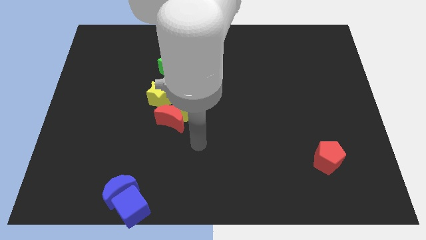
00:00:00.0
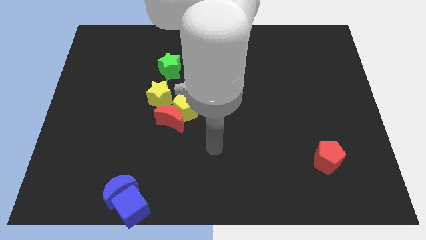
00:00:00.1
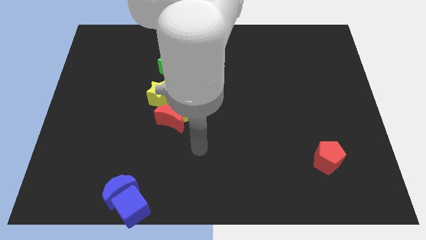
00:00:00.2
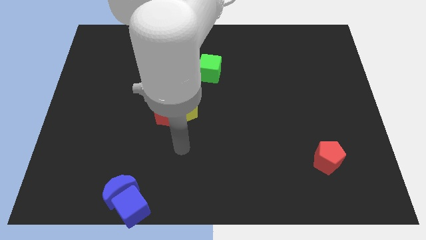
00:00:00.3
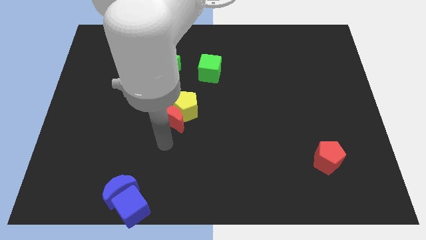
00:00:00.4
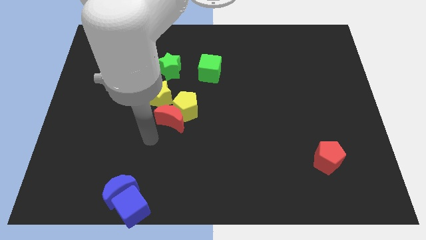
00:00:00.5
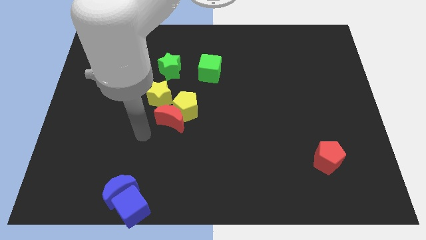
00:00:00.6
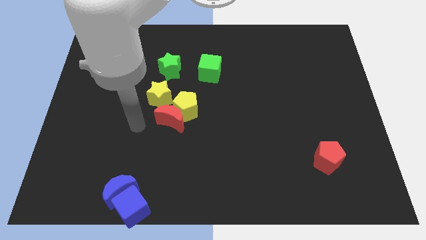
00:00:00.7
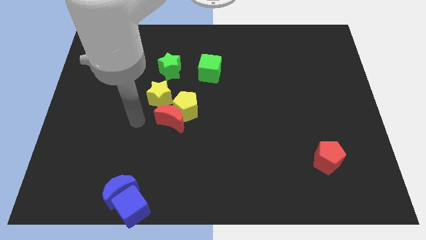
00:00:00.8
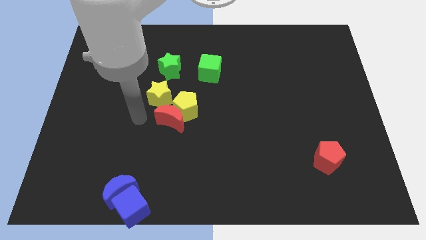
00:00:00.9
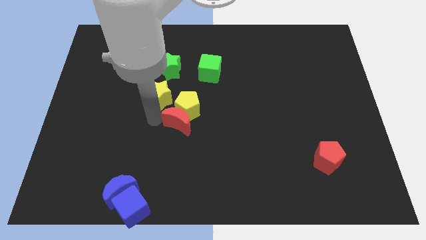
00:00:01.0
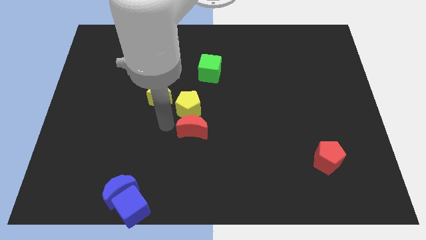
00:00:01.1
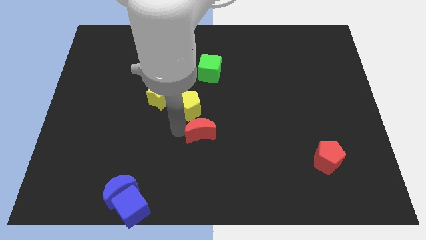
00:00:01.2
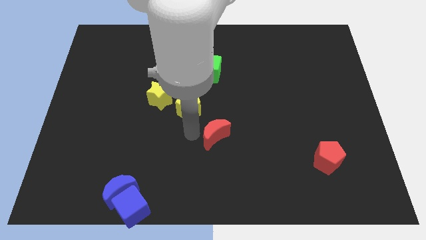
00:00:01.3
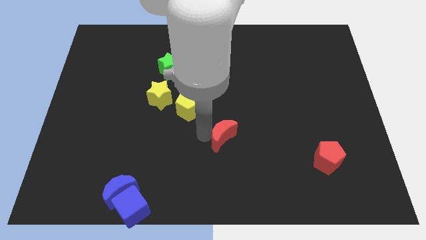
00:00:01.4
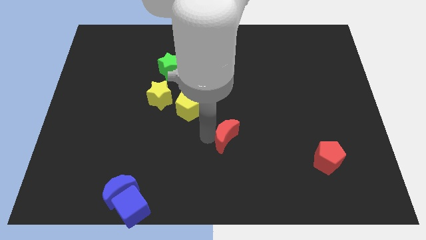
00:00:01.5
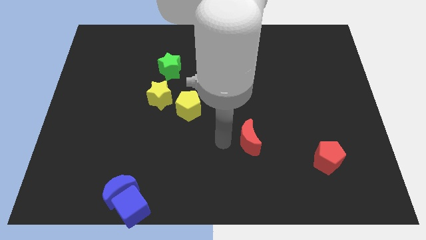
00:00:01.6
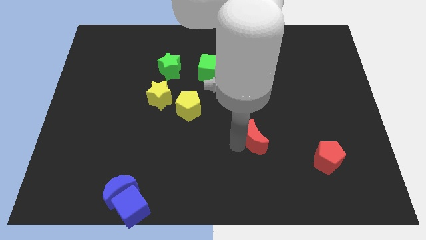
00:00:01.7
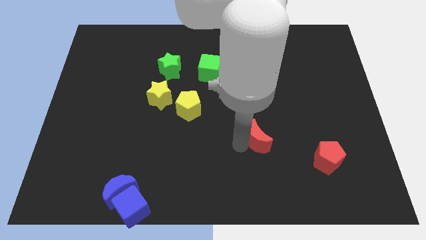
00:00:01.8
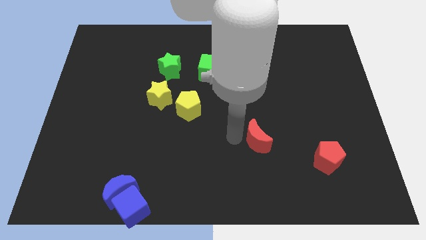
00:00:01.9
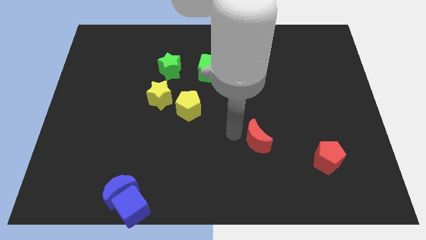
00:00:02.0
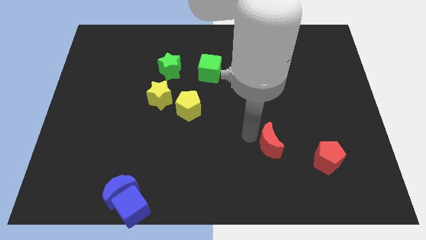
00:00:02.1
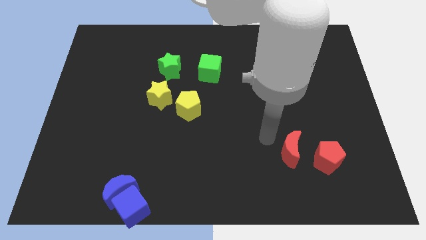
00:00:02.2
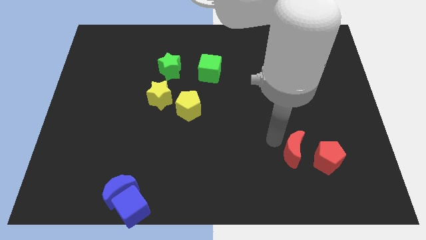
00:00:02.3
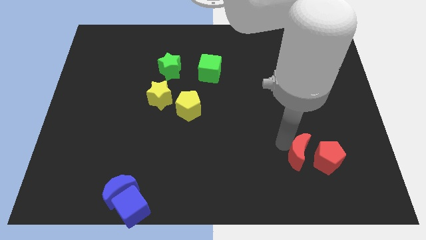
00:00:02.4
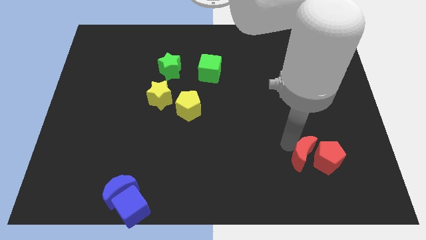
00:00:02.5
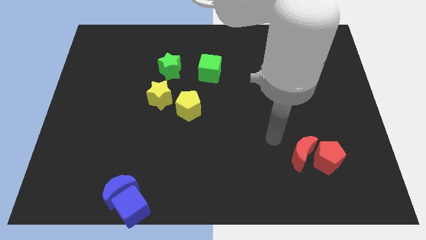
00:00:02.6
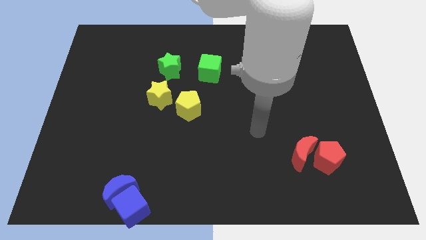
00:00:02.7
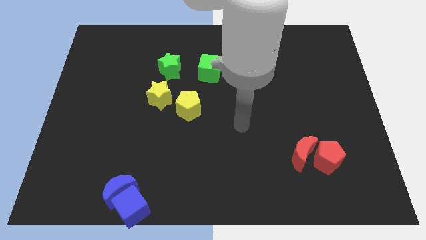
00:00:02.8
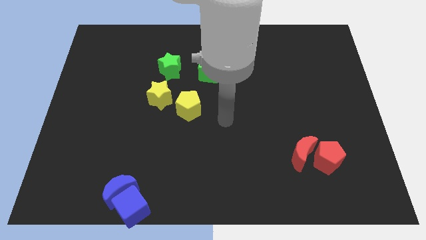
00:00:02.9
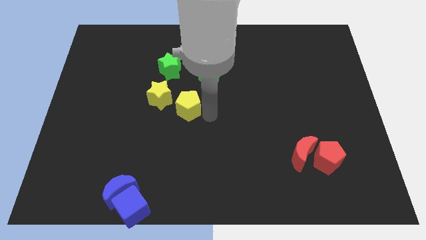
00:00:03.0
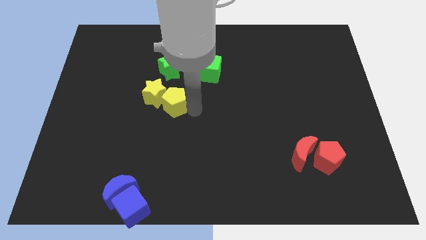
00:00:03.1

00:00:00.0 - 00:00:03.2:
move the red moon into the red pentagon

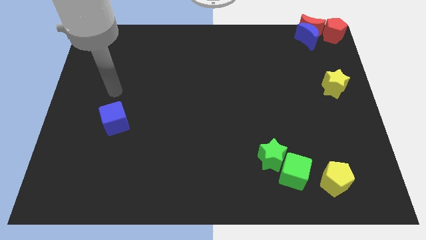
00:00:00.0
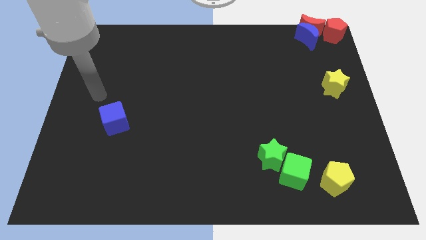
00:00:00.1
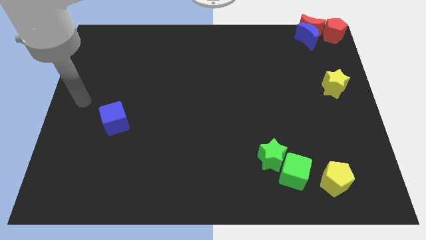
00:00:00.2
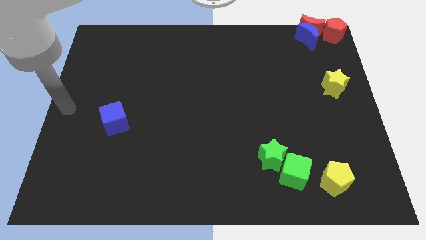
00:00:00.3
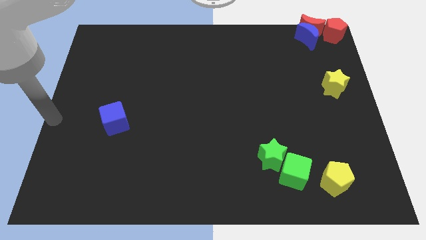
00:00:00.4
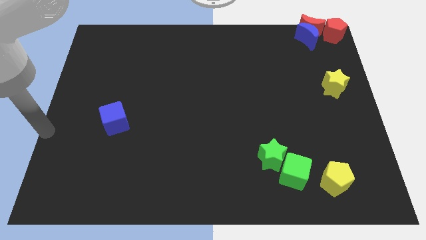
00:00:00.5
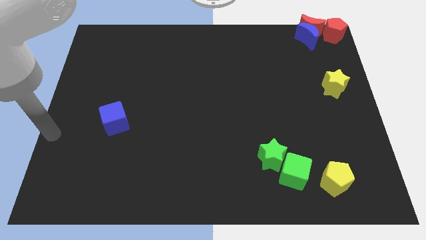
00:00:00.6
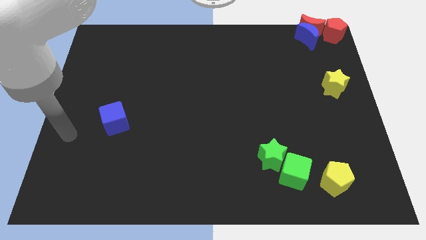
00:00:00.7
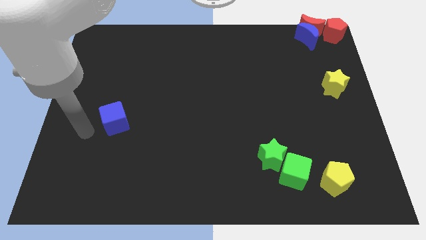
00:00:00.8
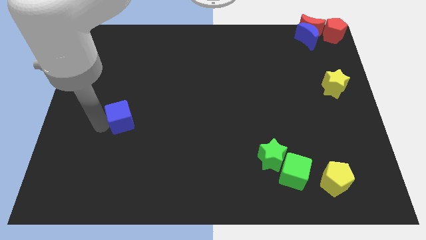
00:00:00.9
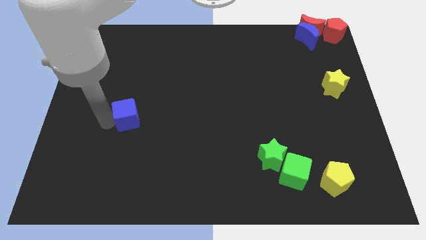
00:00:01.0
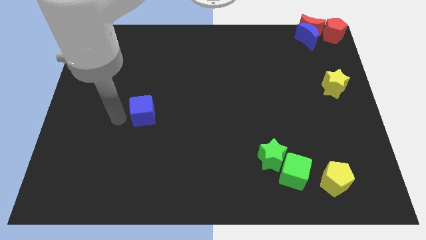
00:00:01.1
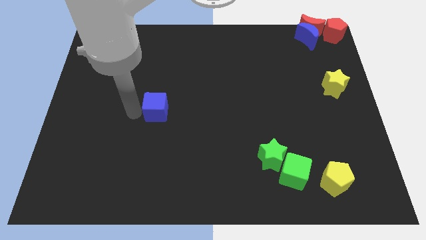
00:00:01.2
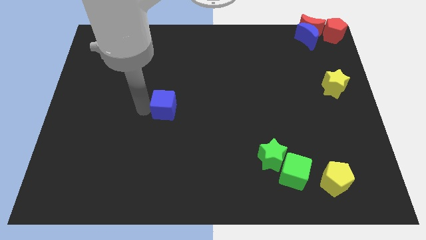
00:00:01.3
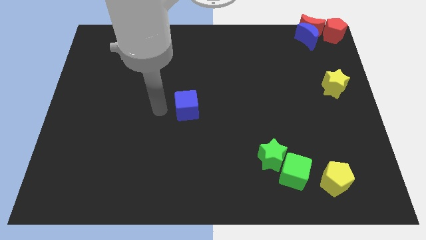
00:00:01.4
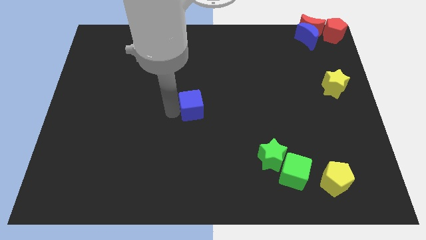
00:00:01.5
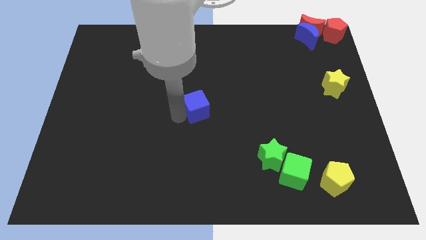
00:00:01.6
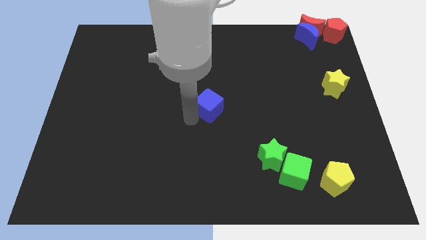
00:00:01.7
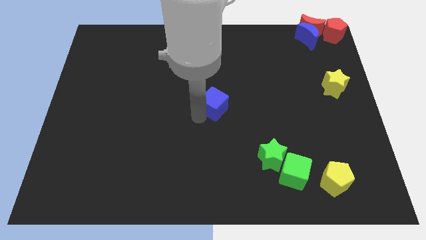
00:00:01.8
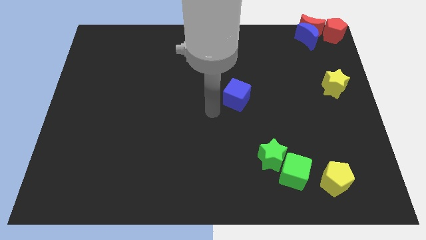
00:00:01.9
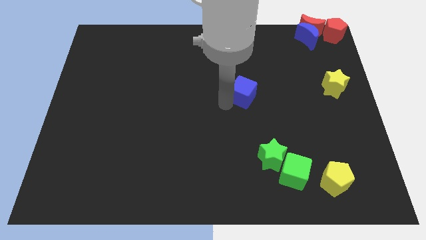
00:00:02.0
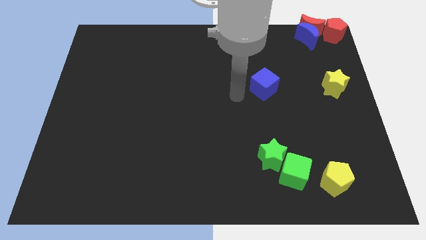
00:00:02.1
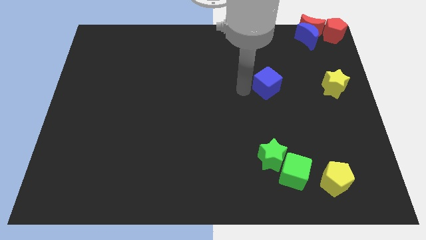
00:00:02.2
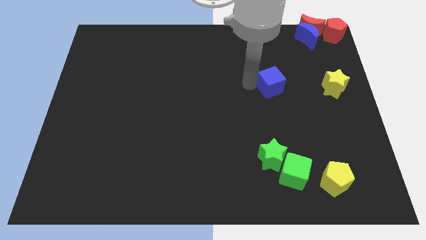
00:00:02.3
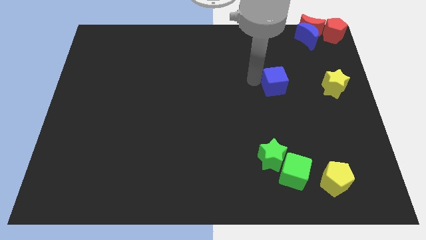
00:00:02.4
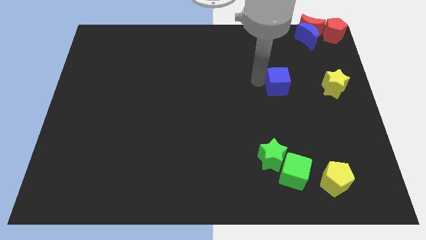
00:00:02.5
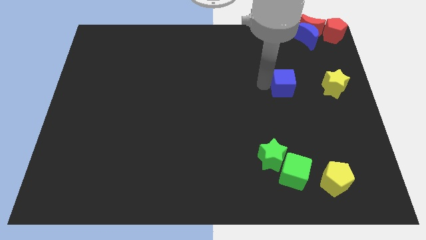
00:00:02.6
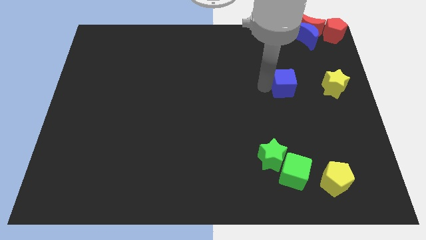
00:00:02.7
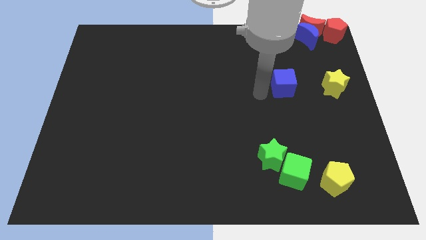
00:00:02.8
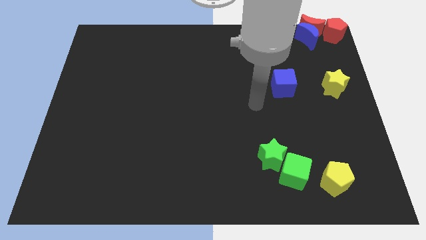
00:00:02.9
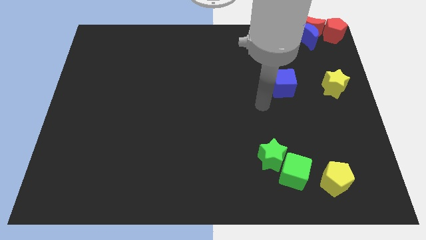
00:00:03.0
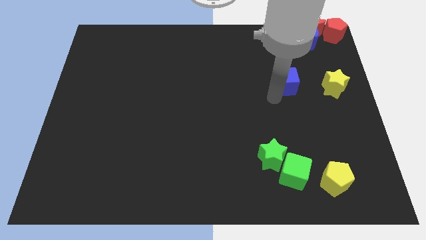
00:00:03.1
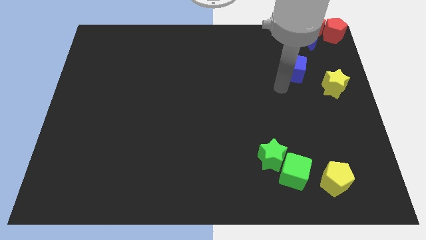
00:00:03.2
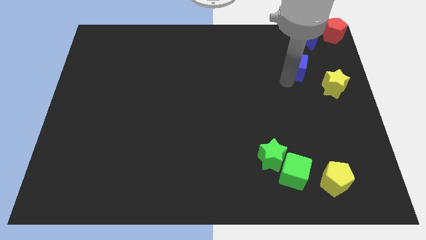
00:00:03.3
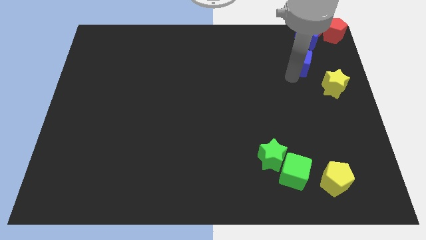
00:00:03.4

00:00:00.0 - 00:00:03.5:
push the blue cube horizontally to the yellow star

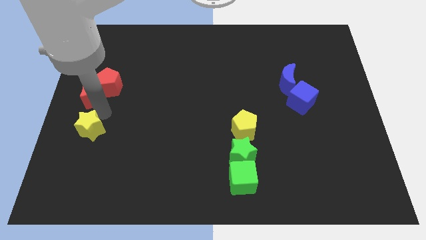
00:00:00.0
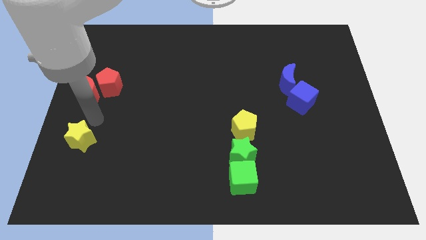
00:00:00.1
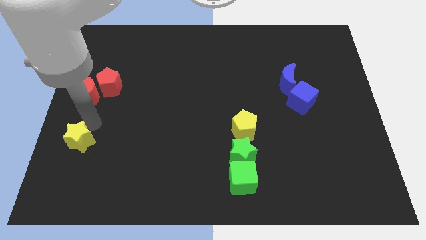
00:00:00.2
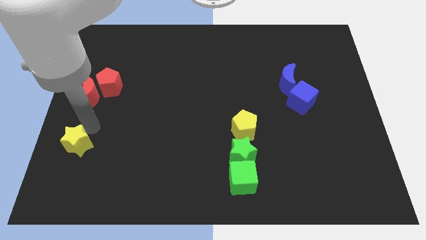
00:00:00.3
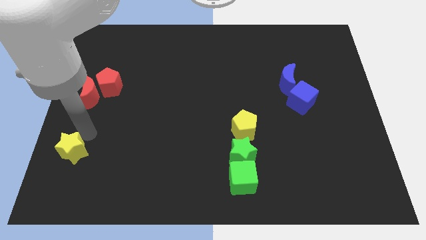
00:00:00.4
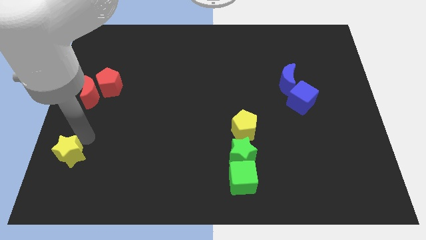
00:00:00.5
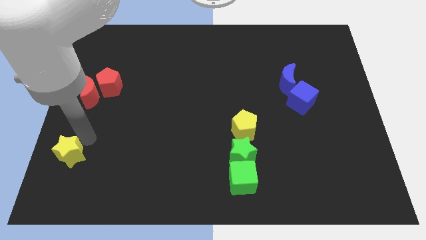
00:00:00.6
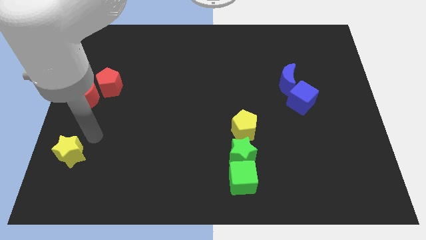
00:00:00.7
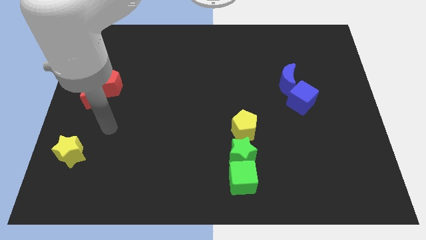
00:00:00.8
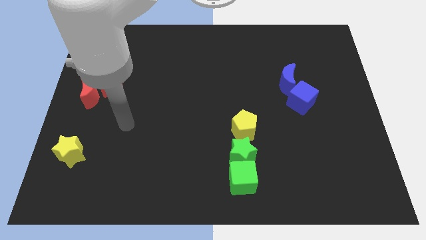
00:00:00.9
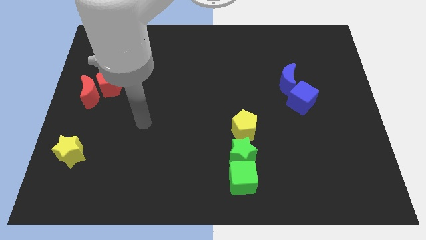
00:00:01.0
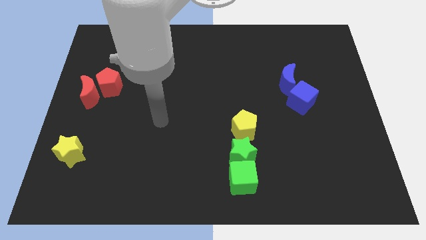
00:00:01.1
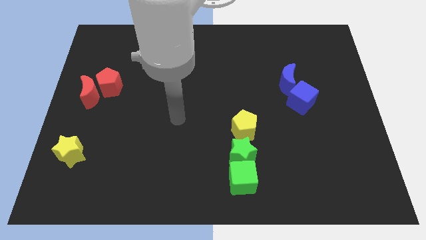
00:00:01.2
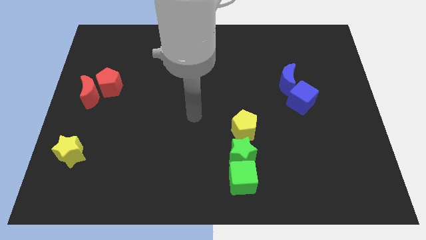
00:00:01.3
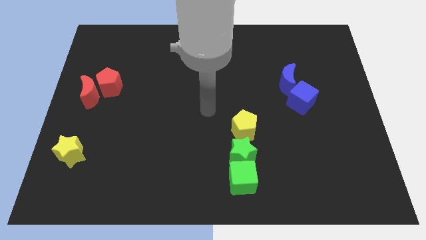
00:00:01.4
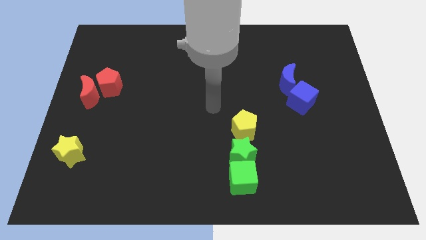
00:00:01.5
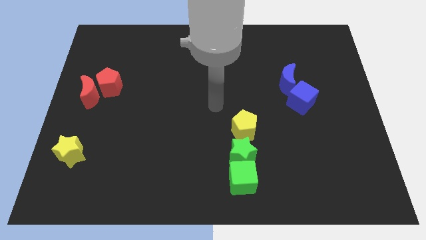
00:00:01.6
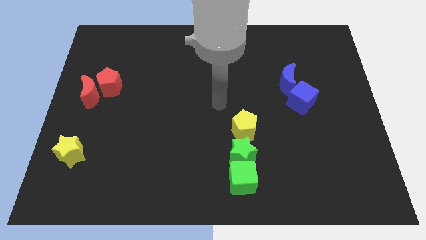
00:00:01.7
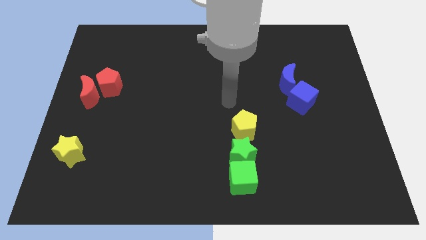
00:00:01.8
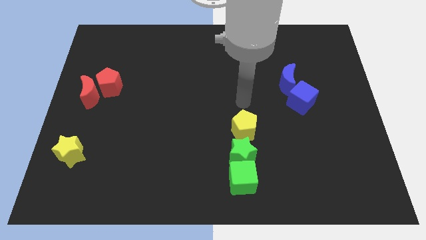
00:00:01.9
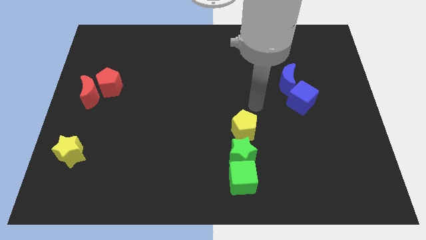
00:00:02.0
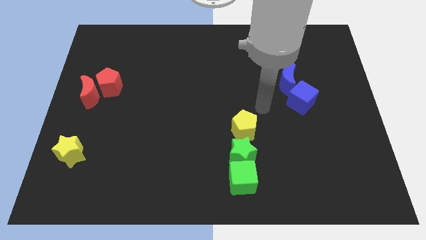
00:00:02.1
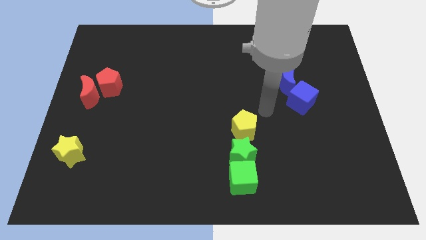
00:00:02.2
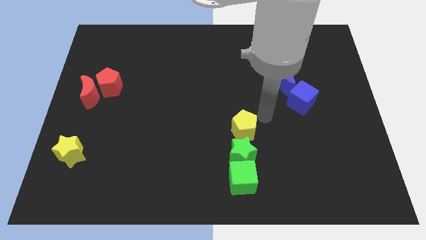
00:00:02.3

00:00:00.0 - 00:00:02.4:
push yellow star slightly to the left
